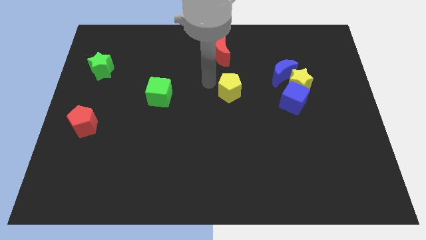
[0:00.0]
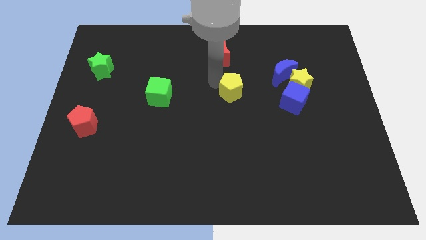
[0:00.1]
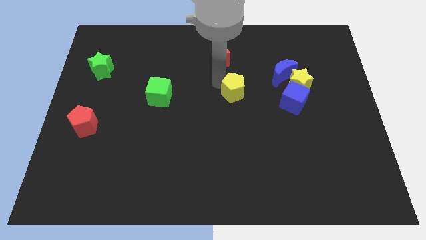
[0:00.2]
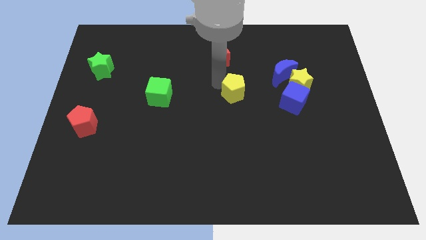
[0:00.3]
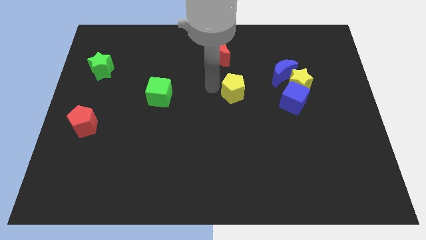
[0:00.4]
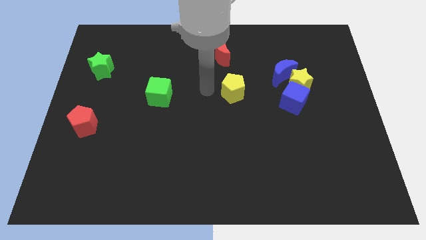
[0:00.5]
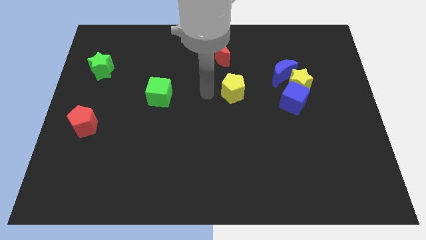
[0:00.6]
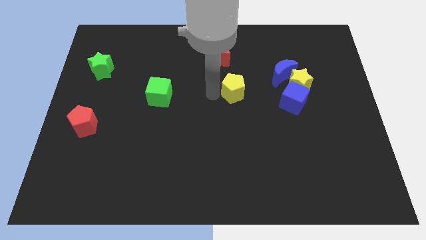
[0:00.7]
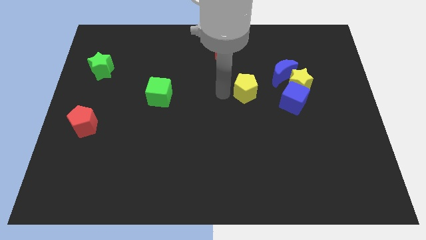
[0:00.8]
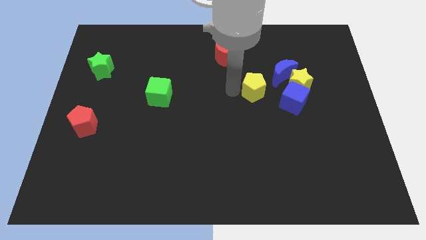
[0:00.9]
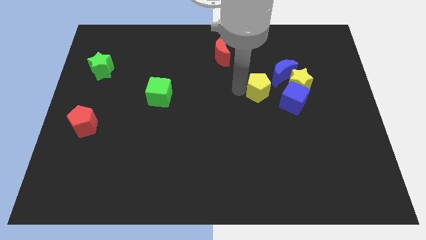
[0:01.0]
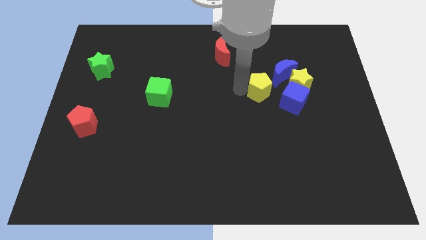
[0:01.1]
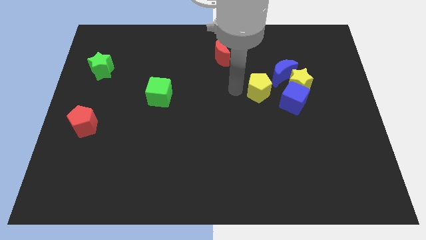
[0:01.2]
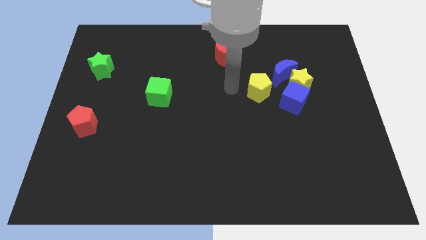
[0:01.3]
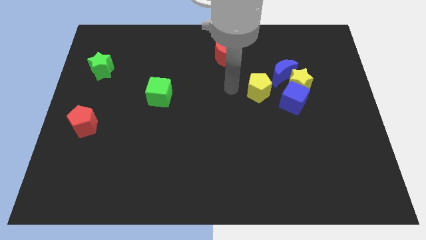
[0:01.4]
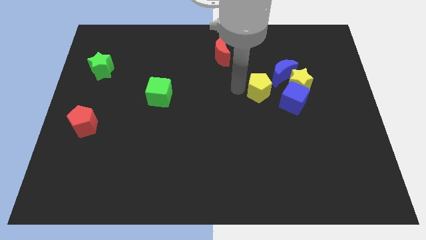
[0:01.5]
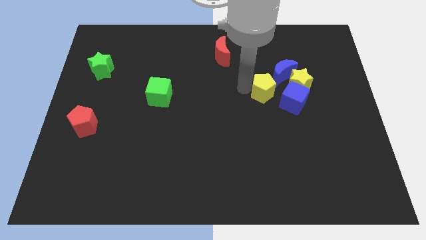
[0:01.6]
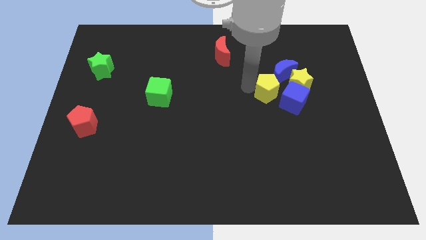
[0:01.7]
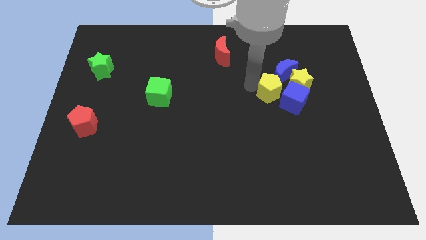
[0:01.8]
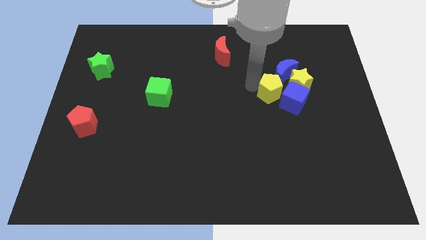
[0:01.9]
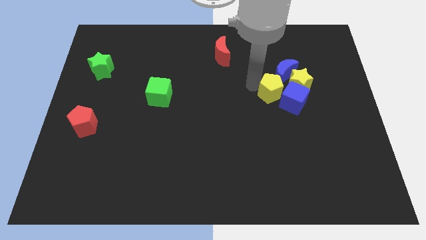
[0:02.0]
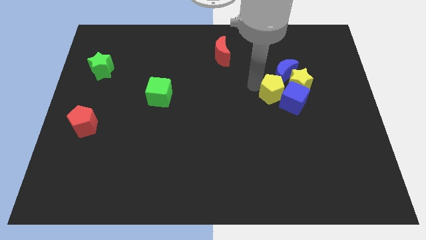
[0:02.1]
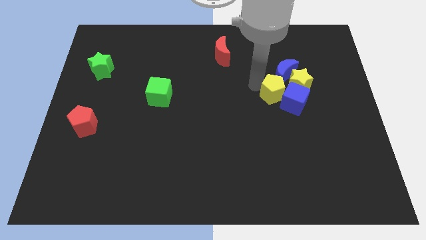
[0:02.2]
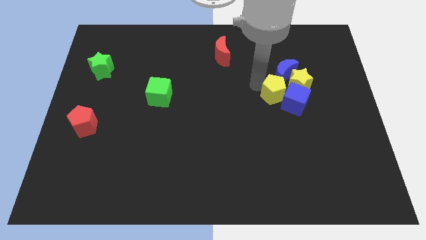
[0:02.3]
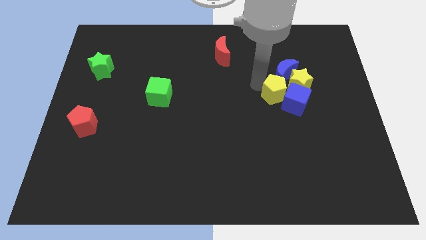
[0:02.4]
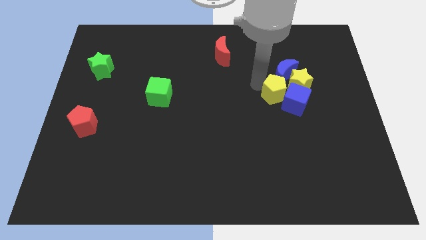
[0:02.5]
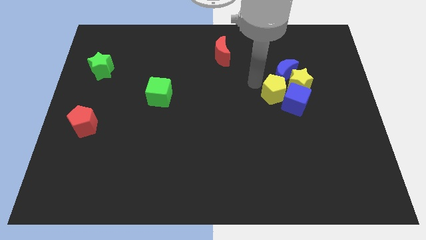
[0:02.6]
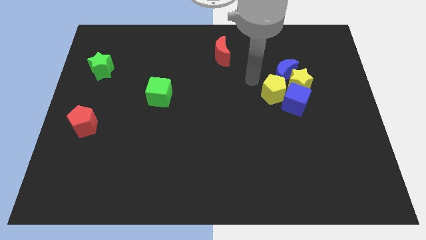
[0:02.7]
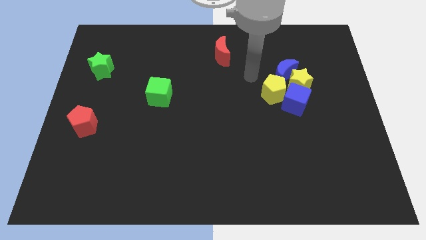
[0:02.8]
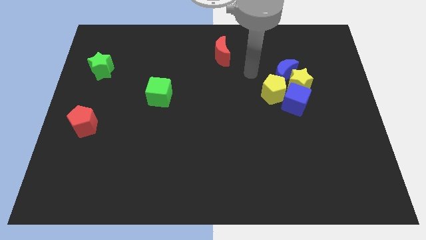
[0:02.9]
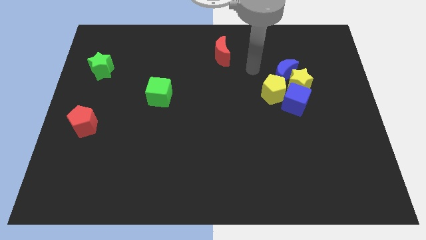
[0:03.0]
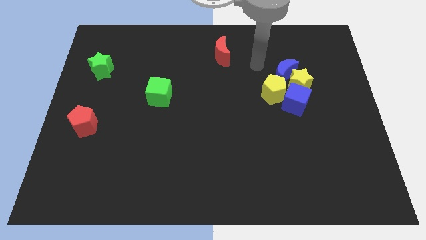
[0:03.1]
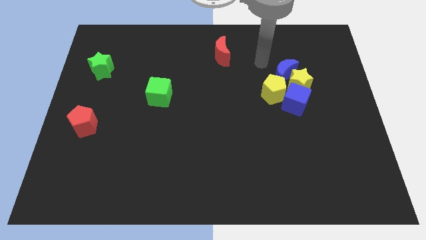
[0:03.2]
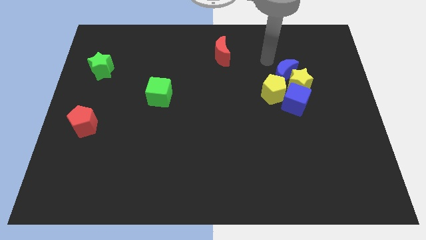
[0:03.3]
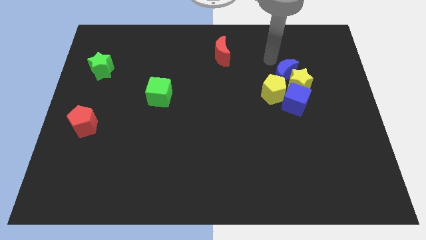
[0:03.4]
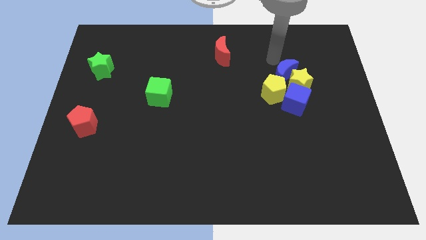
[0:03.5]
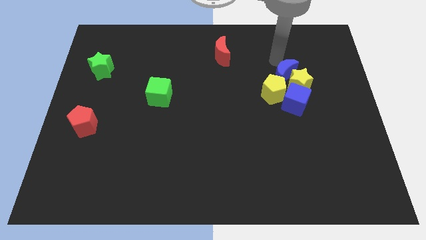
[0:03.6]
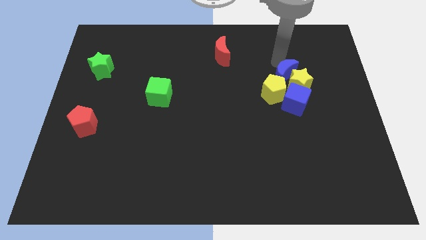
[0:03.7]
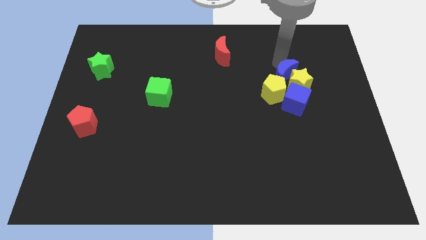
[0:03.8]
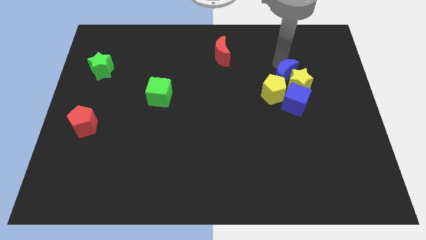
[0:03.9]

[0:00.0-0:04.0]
move the yellow pentagon into the blue moon from bottom

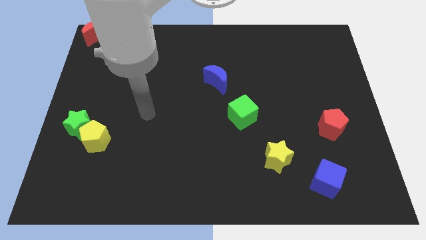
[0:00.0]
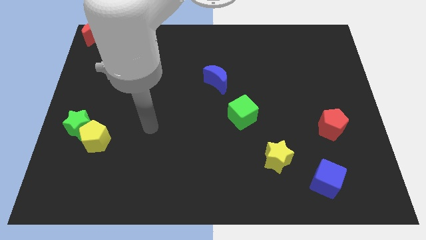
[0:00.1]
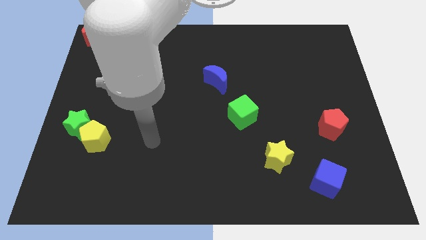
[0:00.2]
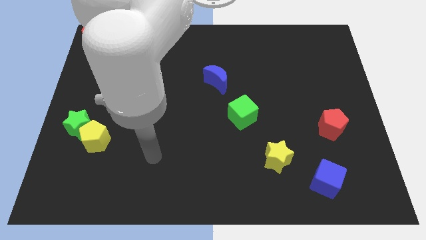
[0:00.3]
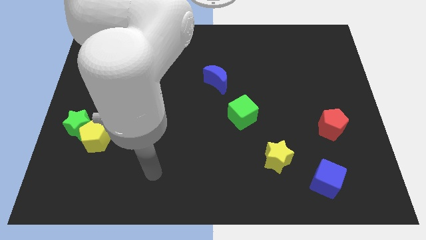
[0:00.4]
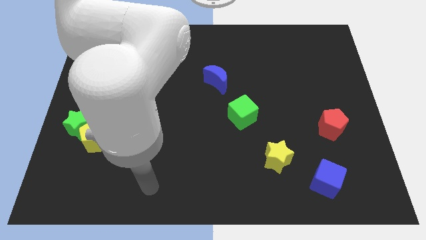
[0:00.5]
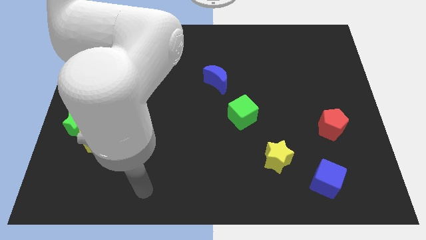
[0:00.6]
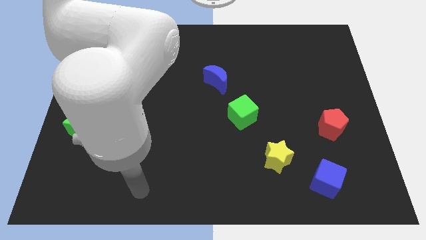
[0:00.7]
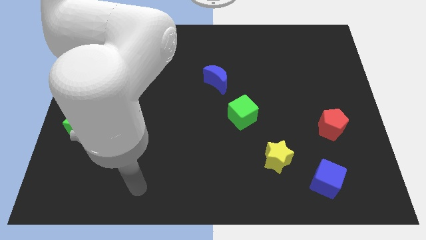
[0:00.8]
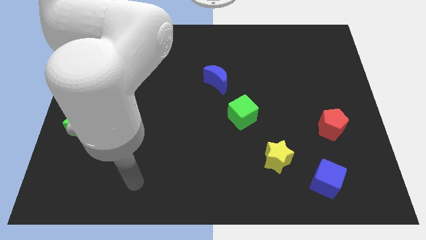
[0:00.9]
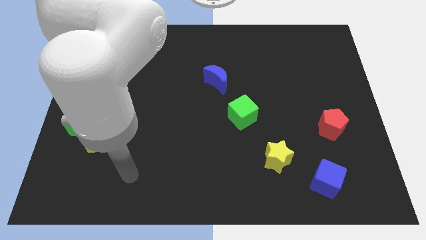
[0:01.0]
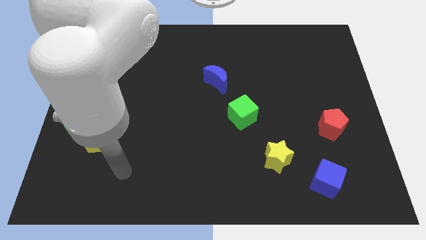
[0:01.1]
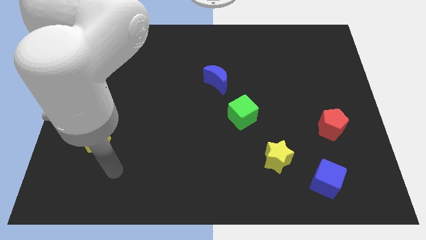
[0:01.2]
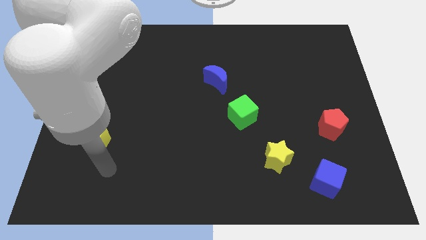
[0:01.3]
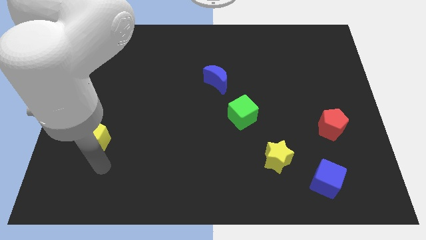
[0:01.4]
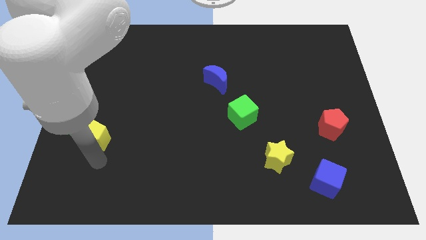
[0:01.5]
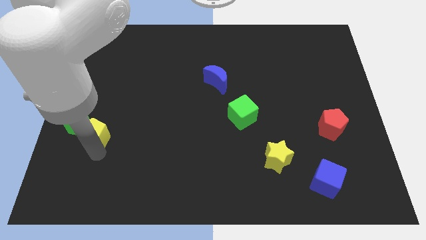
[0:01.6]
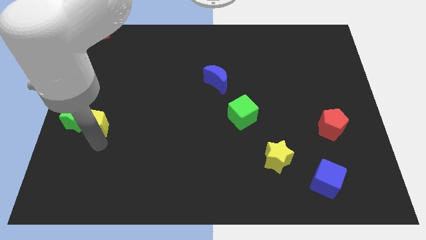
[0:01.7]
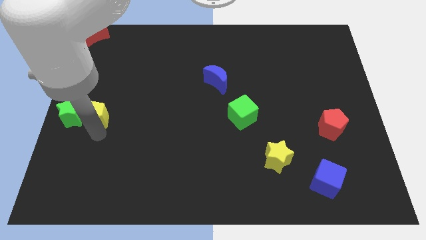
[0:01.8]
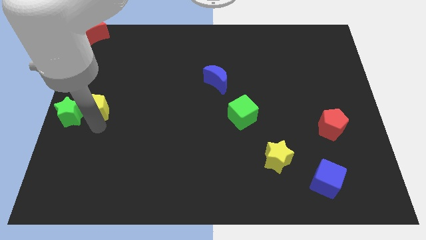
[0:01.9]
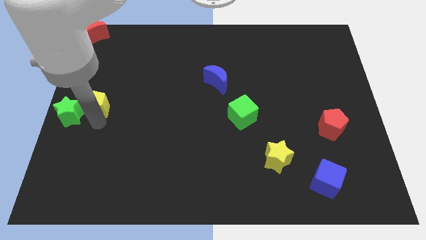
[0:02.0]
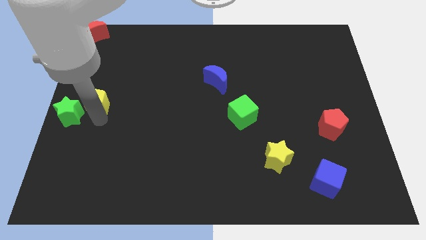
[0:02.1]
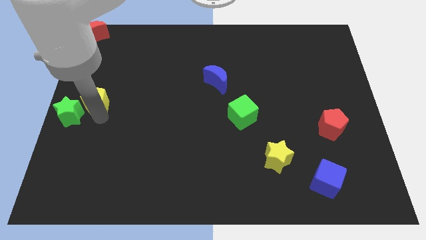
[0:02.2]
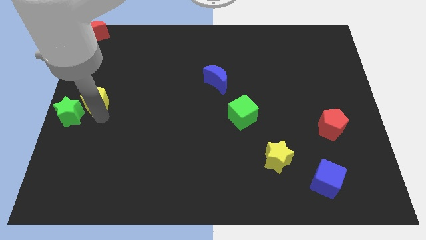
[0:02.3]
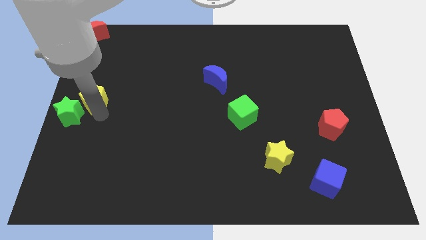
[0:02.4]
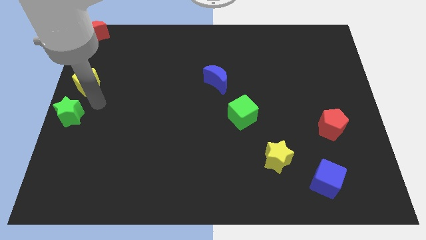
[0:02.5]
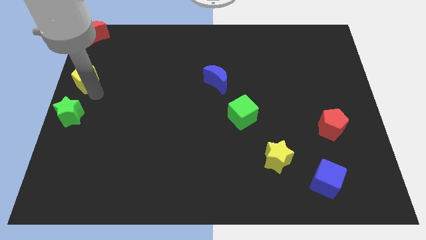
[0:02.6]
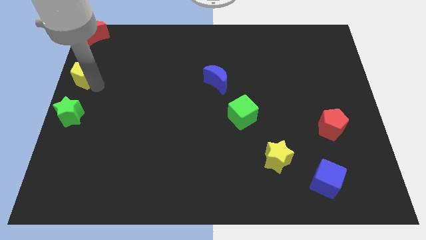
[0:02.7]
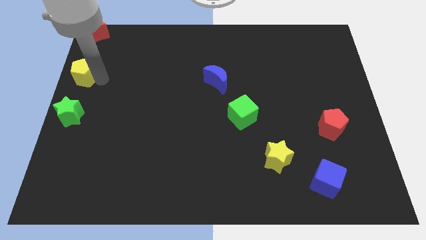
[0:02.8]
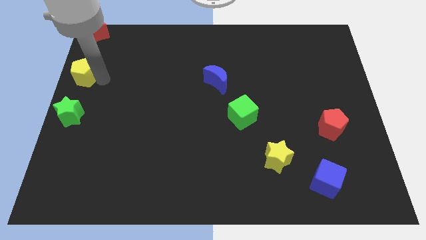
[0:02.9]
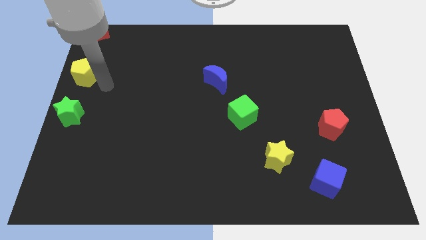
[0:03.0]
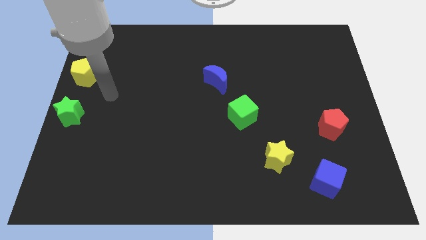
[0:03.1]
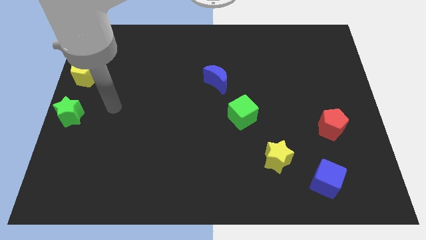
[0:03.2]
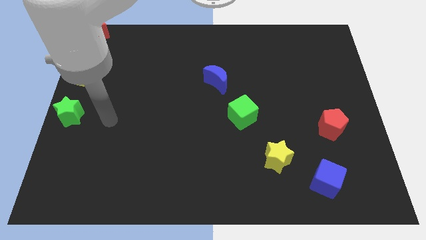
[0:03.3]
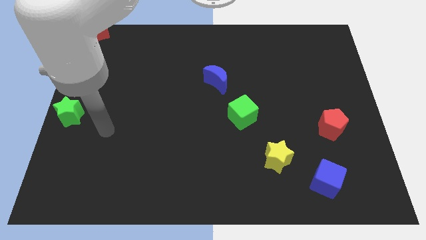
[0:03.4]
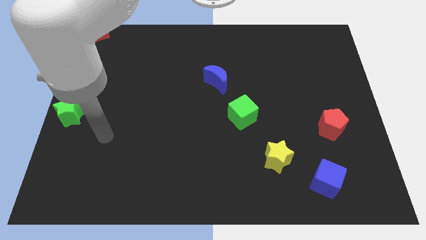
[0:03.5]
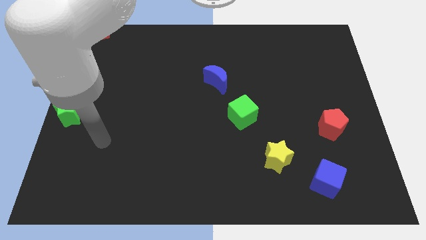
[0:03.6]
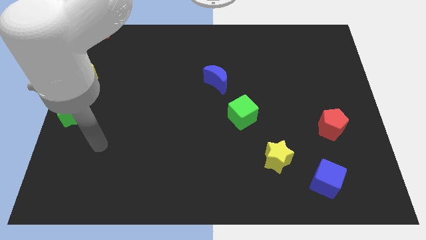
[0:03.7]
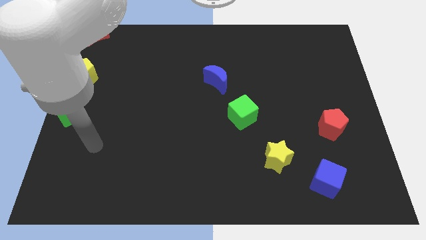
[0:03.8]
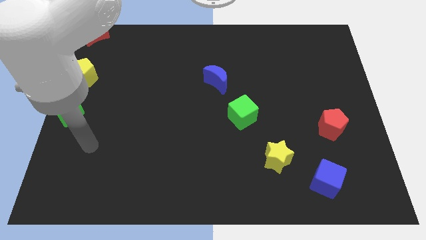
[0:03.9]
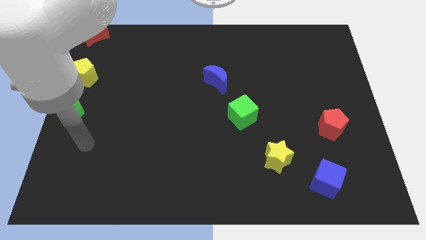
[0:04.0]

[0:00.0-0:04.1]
move yellow pentagon below the red moon

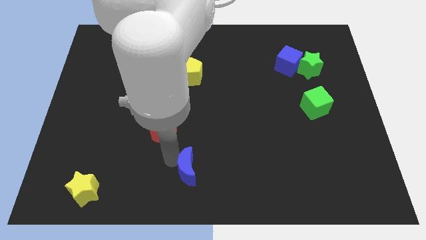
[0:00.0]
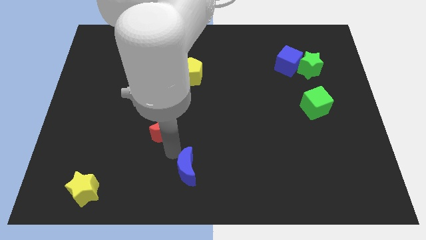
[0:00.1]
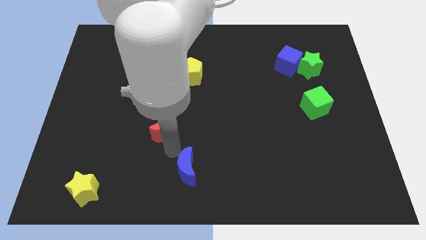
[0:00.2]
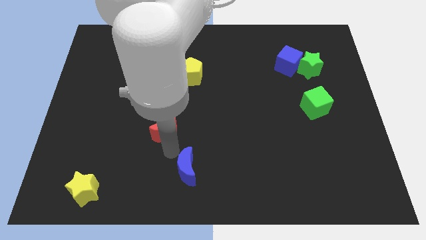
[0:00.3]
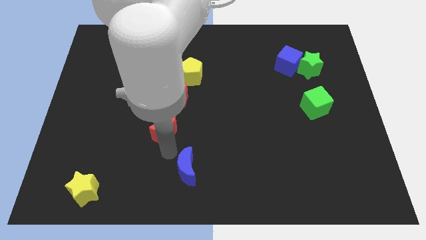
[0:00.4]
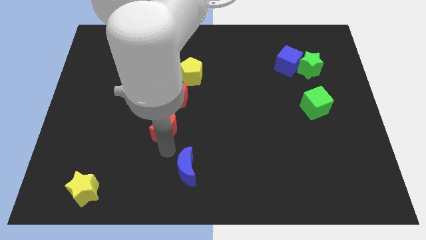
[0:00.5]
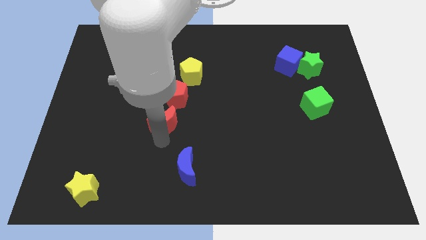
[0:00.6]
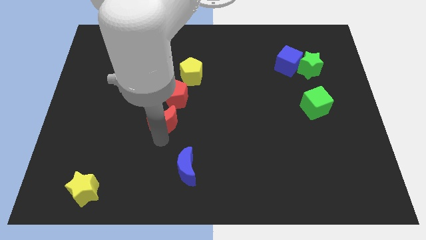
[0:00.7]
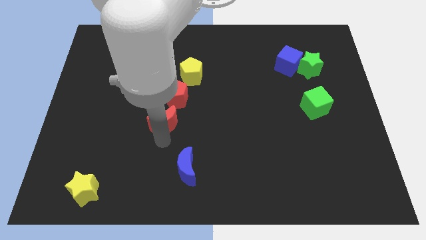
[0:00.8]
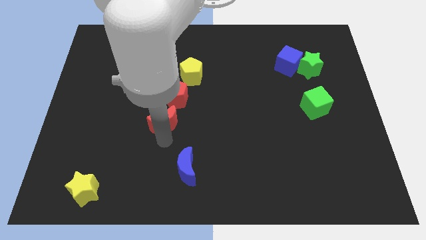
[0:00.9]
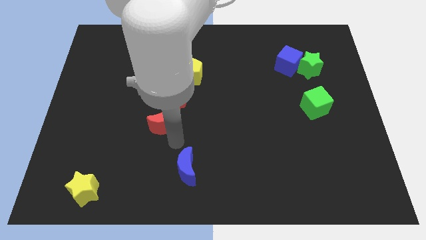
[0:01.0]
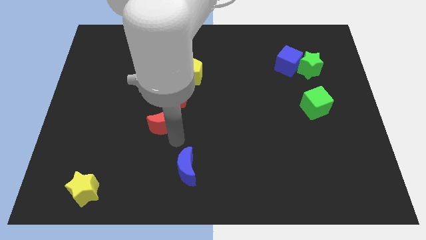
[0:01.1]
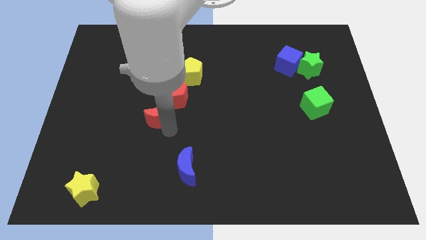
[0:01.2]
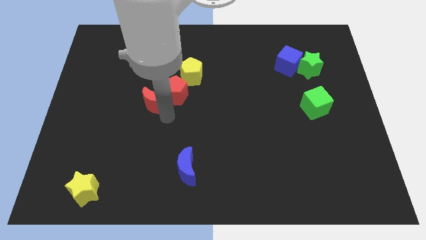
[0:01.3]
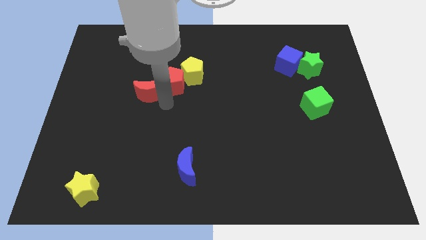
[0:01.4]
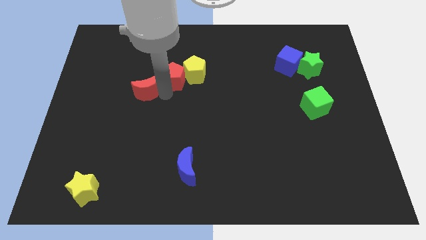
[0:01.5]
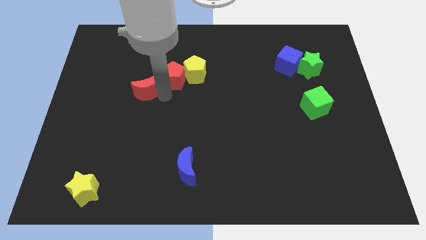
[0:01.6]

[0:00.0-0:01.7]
push the red half moon into the red pentagon
